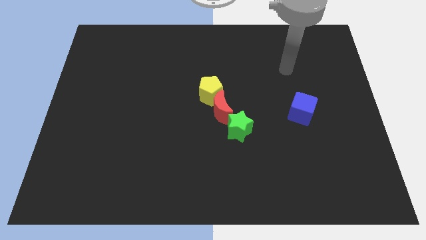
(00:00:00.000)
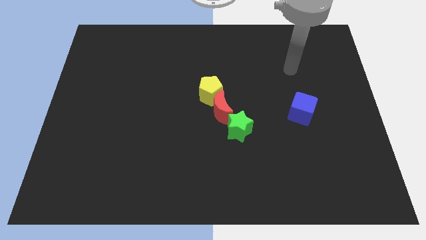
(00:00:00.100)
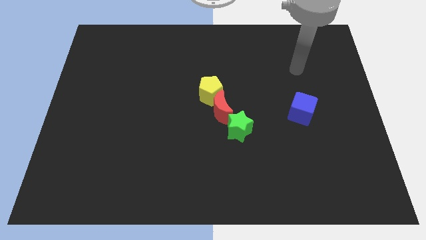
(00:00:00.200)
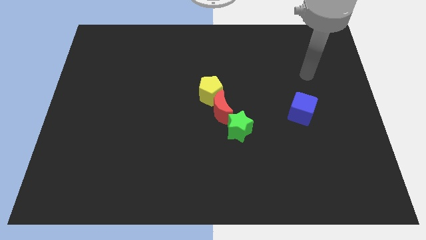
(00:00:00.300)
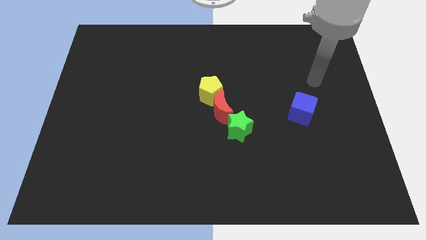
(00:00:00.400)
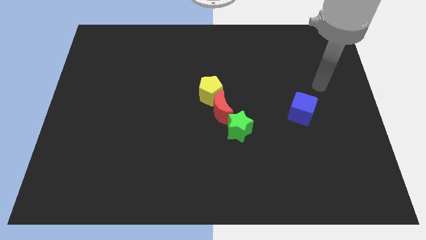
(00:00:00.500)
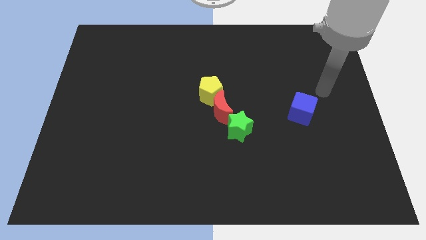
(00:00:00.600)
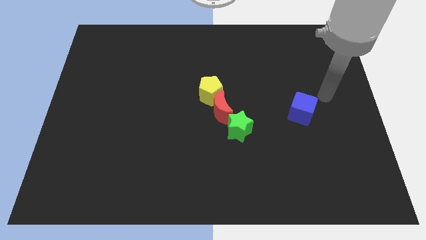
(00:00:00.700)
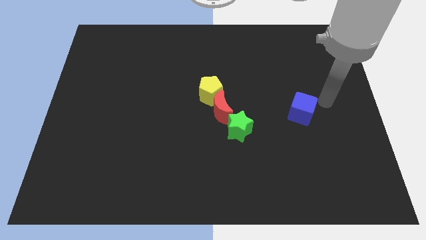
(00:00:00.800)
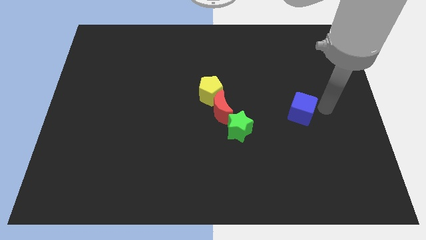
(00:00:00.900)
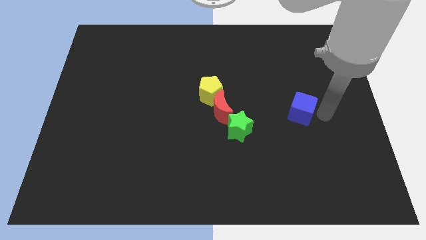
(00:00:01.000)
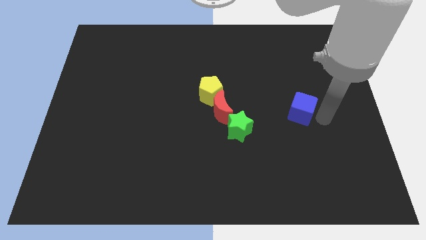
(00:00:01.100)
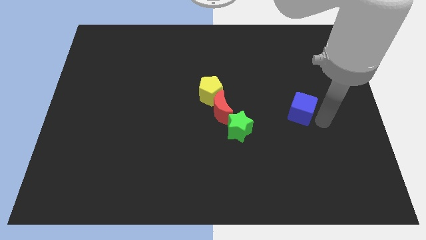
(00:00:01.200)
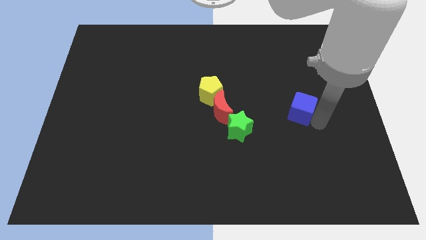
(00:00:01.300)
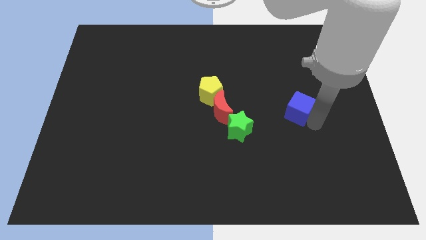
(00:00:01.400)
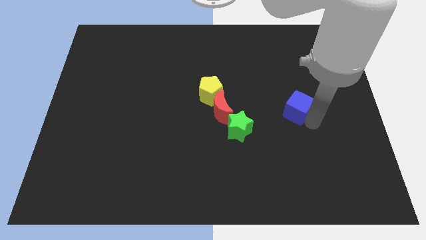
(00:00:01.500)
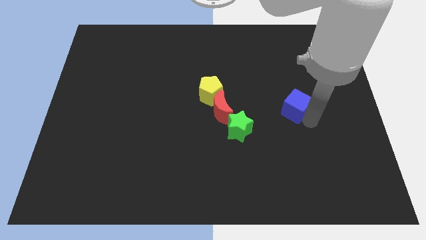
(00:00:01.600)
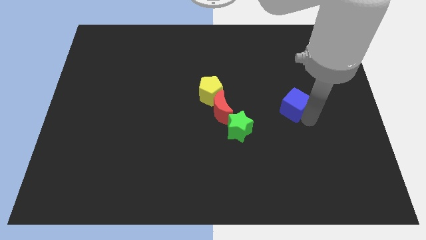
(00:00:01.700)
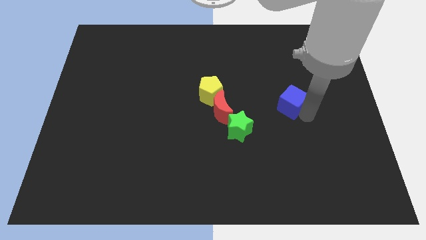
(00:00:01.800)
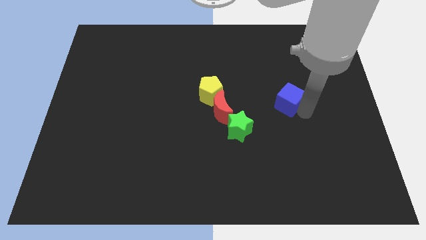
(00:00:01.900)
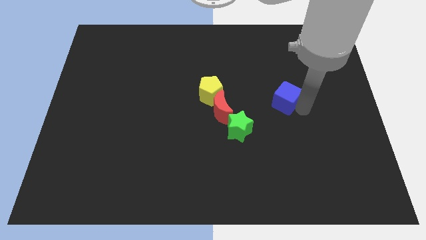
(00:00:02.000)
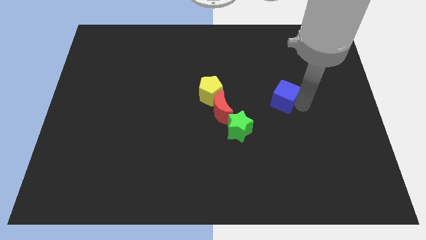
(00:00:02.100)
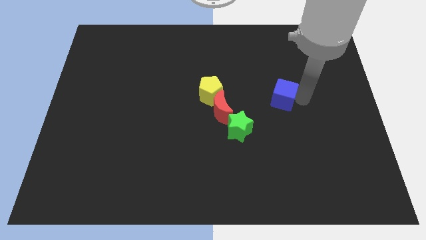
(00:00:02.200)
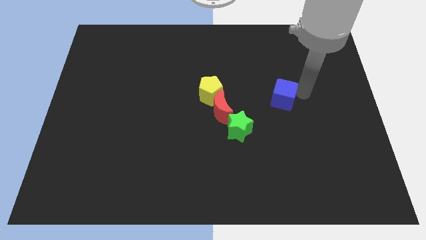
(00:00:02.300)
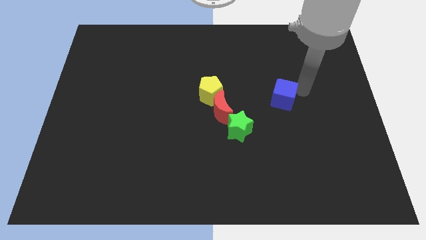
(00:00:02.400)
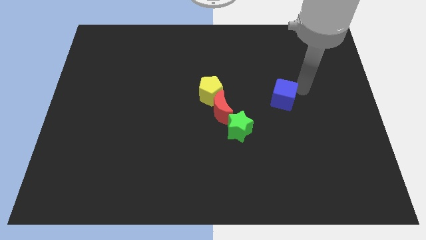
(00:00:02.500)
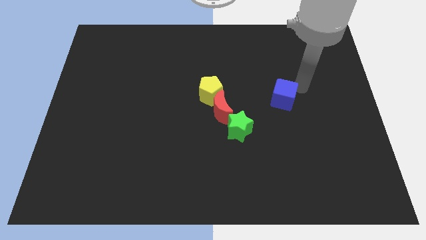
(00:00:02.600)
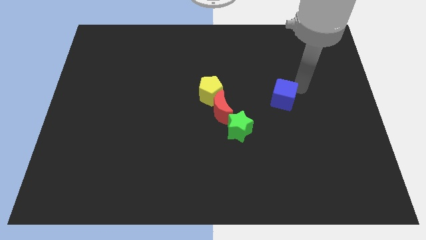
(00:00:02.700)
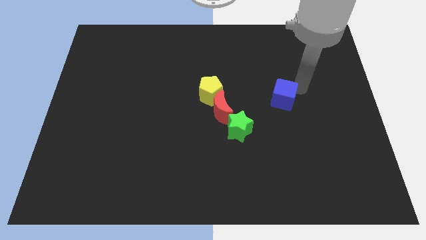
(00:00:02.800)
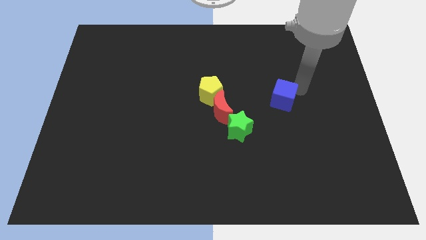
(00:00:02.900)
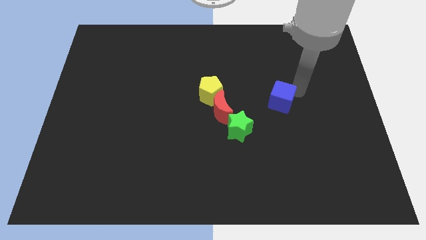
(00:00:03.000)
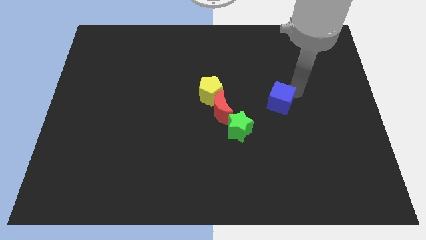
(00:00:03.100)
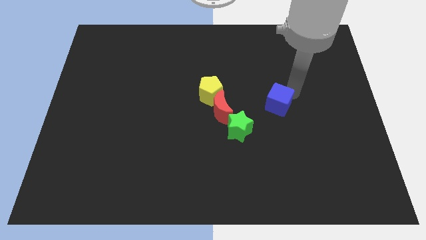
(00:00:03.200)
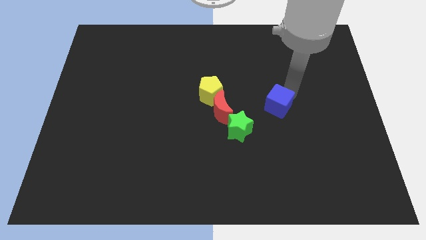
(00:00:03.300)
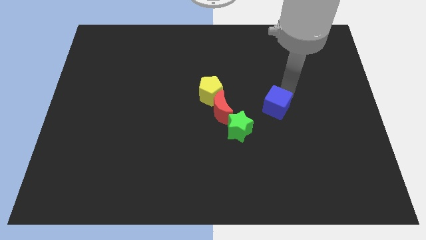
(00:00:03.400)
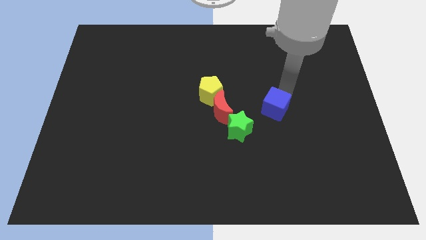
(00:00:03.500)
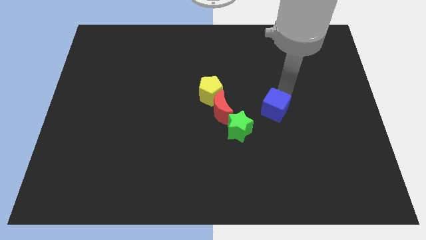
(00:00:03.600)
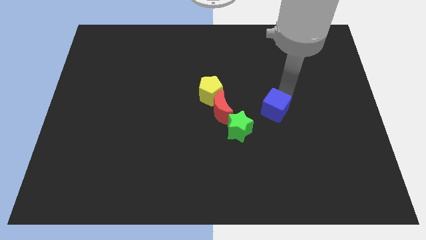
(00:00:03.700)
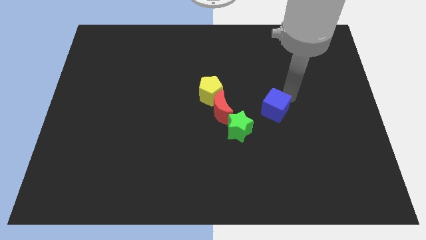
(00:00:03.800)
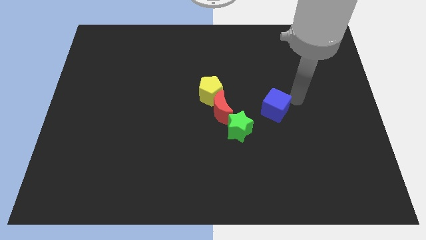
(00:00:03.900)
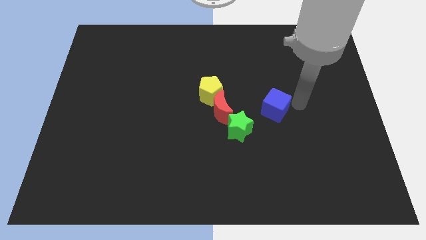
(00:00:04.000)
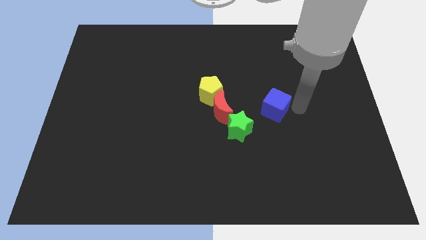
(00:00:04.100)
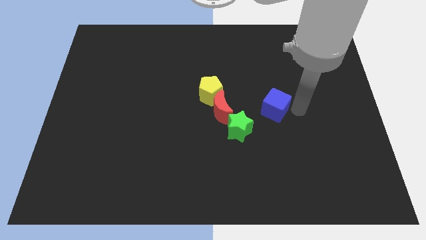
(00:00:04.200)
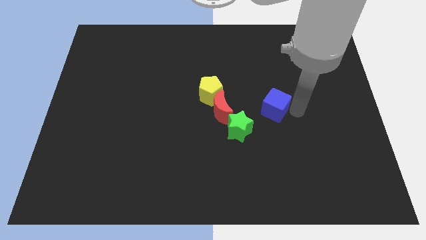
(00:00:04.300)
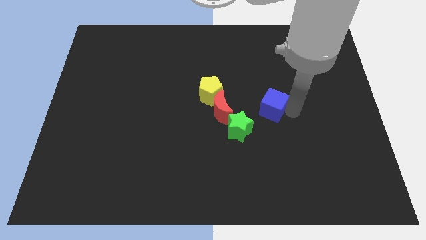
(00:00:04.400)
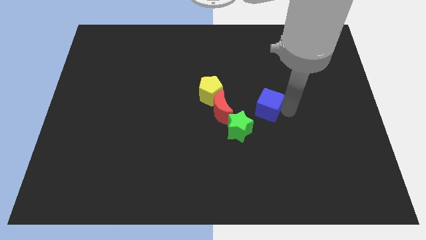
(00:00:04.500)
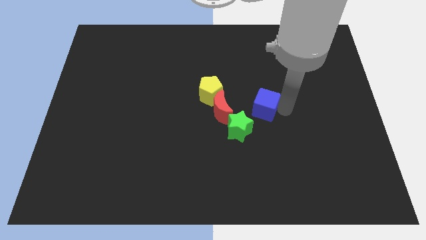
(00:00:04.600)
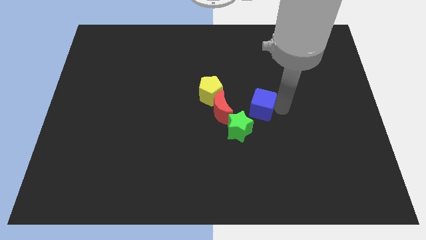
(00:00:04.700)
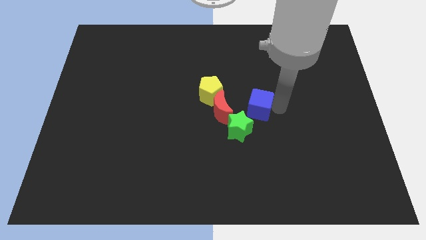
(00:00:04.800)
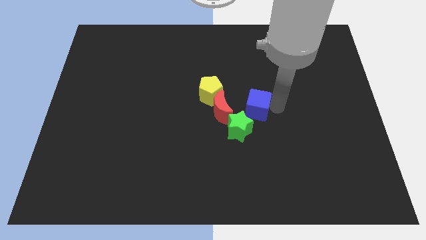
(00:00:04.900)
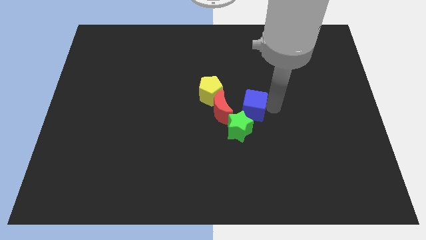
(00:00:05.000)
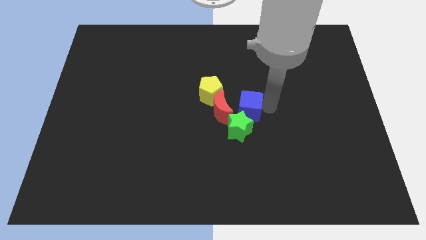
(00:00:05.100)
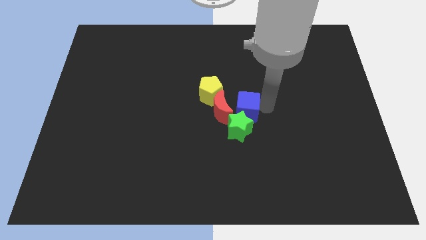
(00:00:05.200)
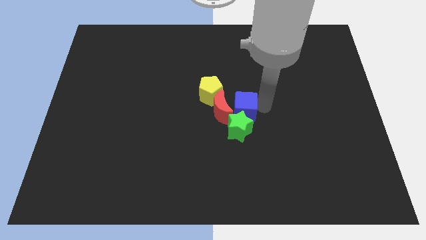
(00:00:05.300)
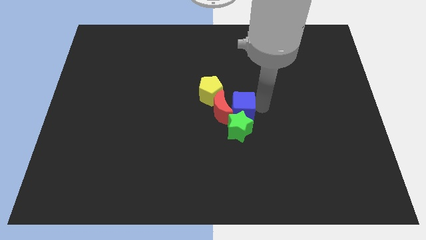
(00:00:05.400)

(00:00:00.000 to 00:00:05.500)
move the cube to the red block

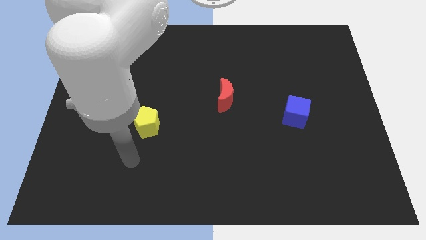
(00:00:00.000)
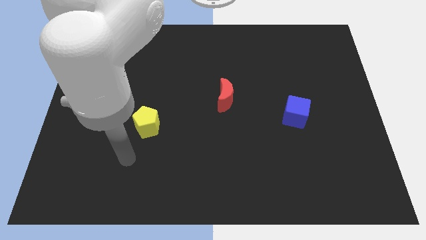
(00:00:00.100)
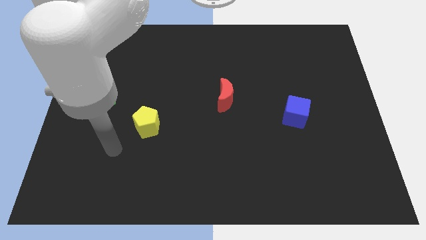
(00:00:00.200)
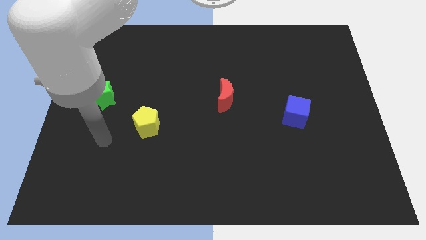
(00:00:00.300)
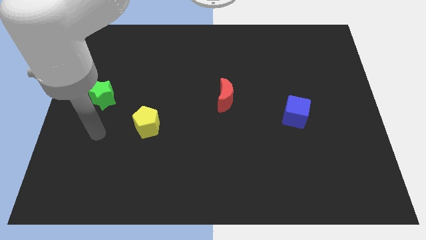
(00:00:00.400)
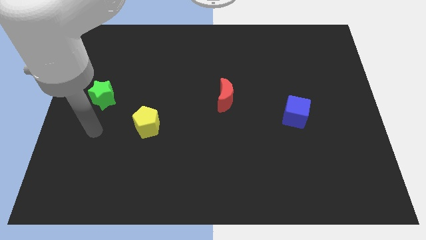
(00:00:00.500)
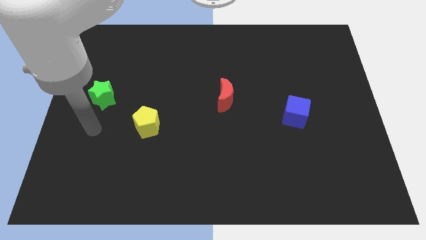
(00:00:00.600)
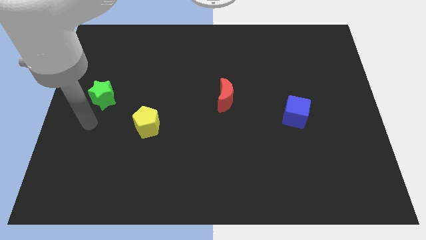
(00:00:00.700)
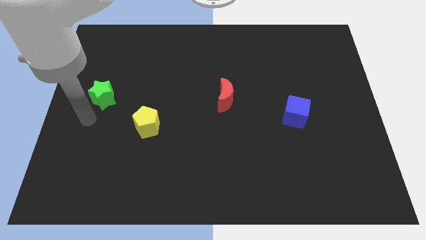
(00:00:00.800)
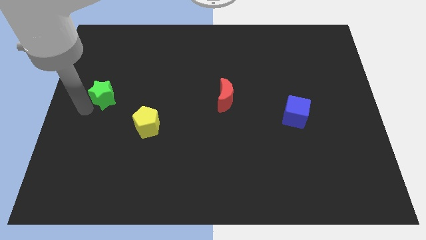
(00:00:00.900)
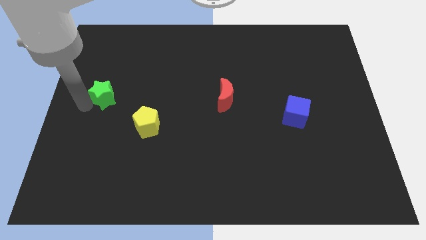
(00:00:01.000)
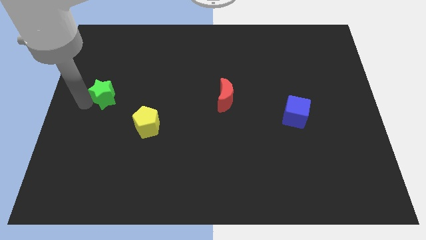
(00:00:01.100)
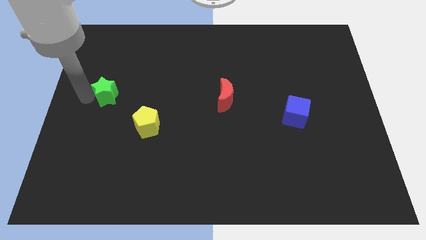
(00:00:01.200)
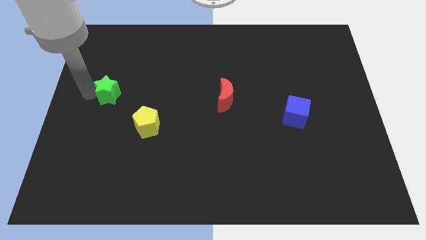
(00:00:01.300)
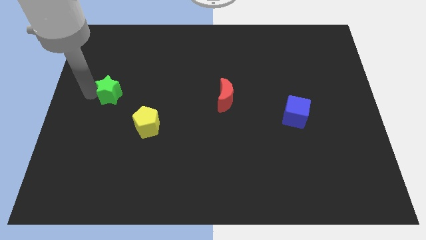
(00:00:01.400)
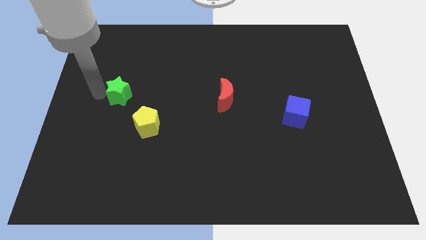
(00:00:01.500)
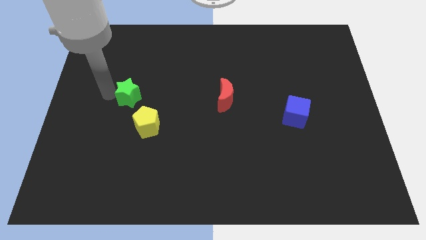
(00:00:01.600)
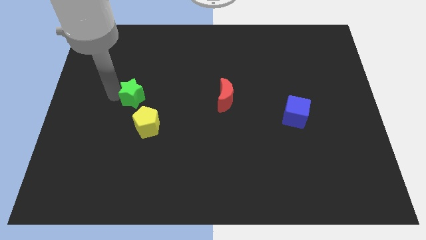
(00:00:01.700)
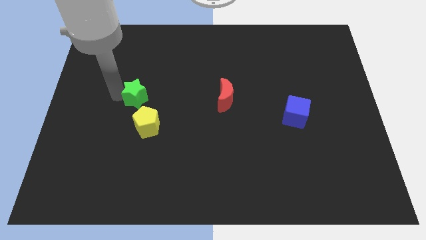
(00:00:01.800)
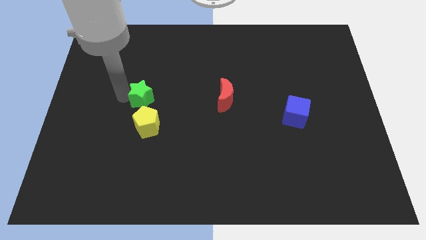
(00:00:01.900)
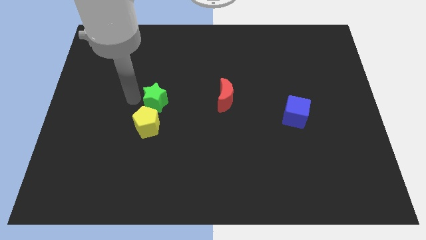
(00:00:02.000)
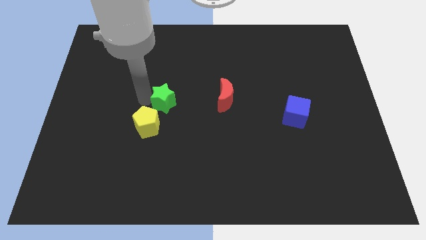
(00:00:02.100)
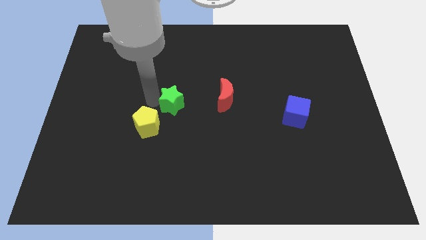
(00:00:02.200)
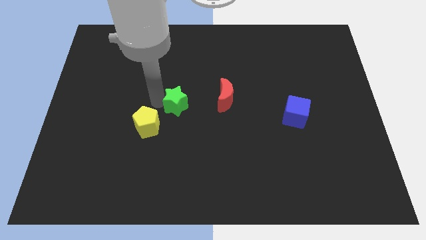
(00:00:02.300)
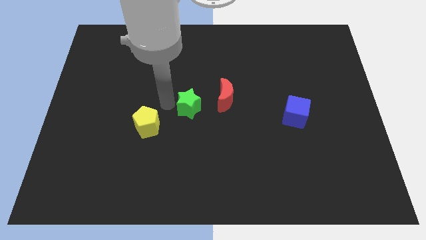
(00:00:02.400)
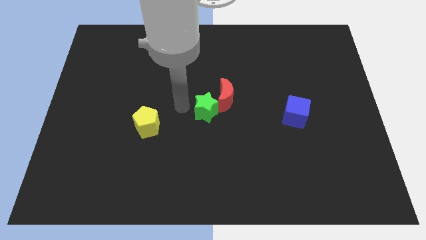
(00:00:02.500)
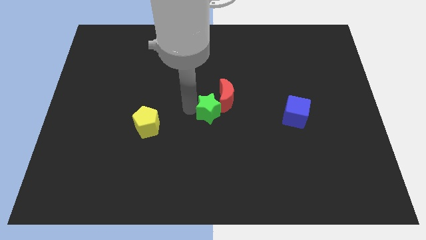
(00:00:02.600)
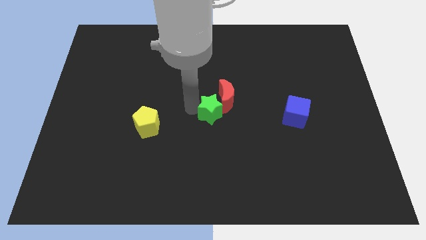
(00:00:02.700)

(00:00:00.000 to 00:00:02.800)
move the green block towards the red moon

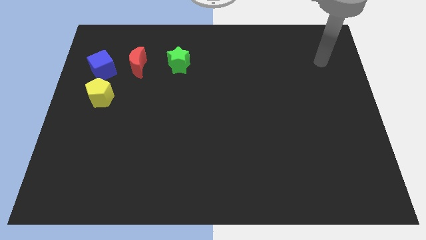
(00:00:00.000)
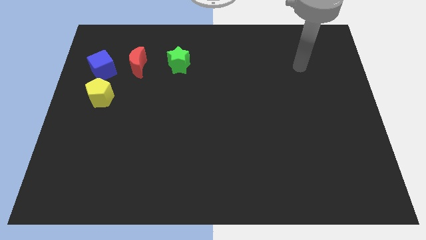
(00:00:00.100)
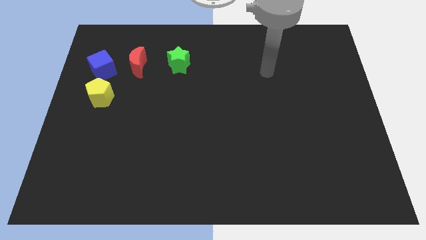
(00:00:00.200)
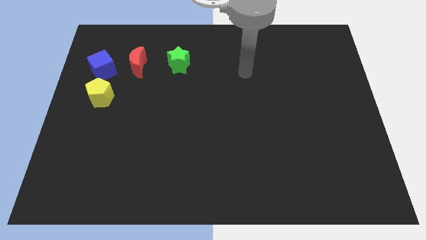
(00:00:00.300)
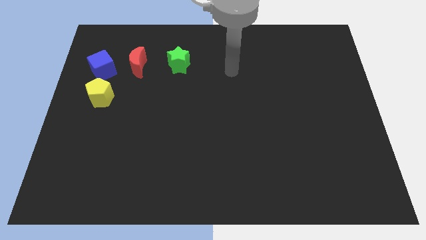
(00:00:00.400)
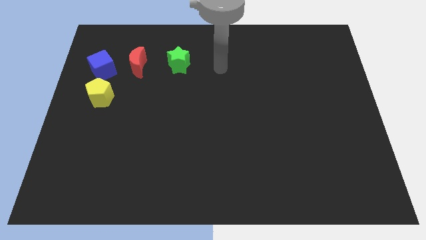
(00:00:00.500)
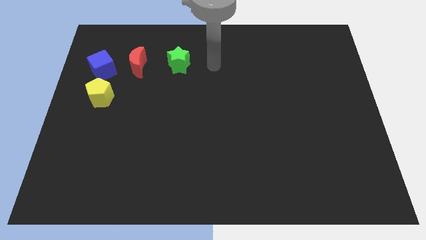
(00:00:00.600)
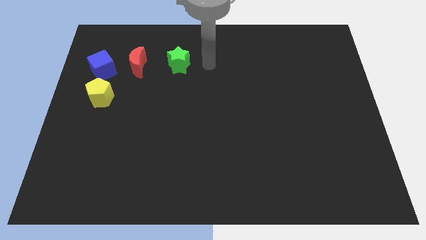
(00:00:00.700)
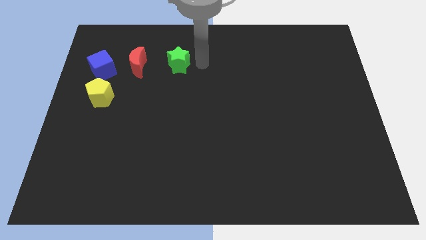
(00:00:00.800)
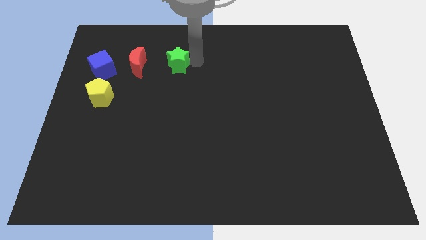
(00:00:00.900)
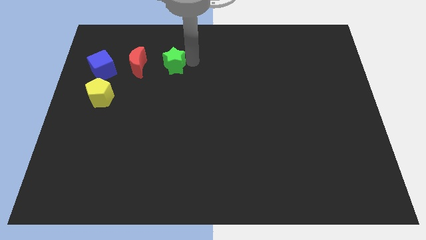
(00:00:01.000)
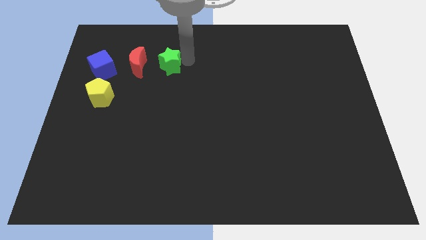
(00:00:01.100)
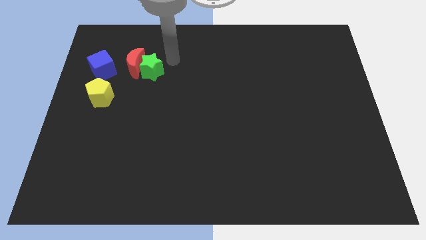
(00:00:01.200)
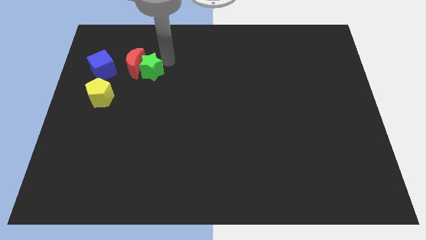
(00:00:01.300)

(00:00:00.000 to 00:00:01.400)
move the green block next to the red moon
